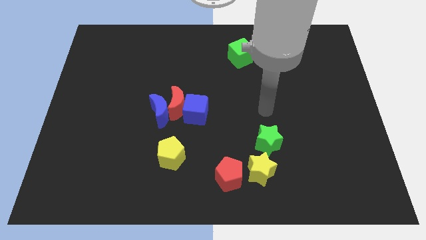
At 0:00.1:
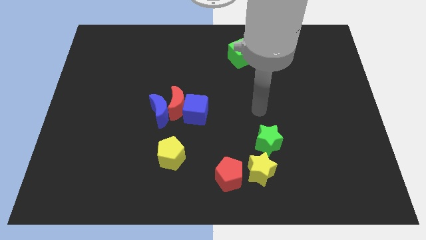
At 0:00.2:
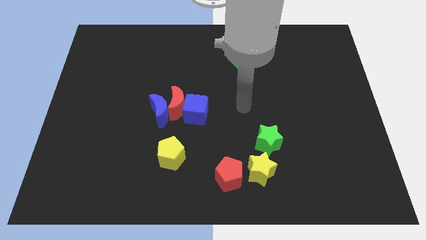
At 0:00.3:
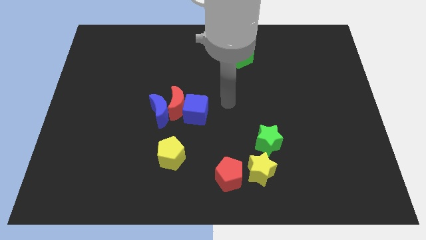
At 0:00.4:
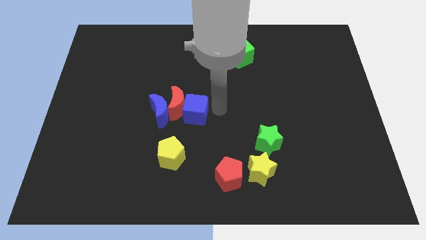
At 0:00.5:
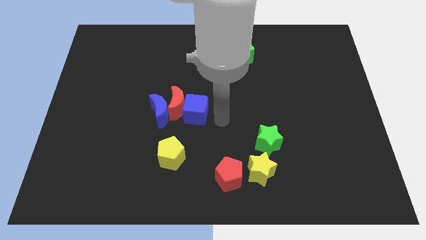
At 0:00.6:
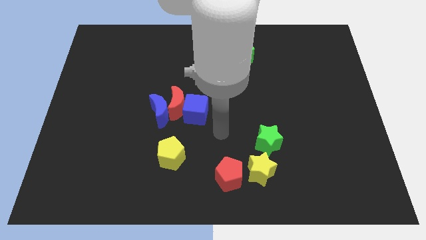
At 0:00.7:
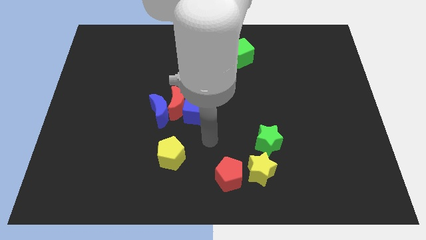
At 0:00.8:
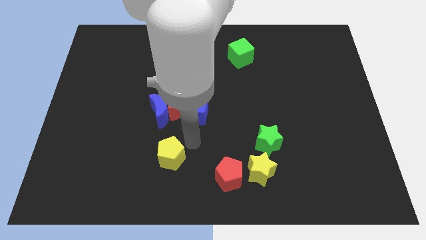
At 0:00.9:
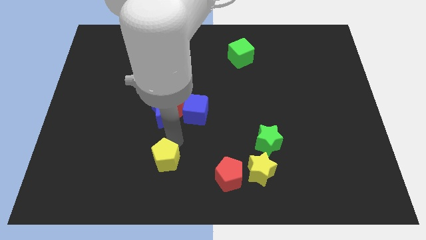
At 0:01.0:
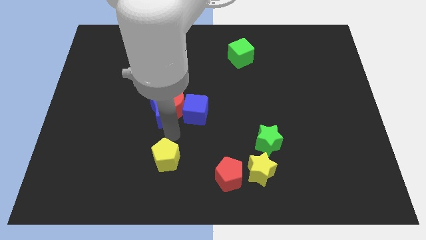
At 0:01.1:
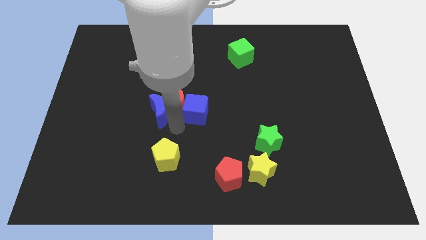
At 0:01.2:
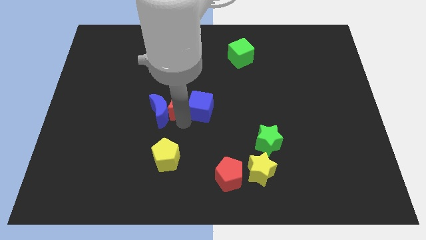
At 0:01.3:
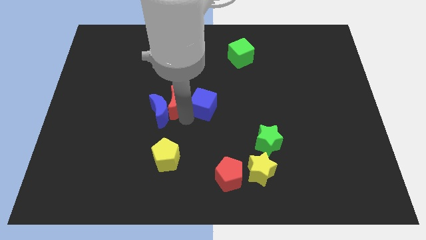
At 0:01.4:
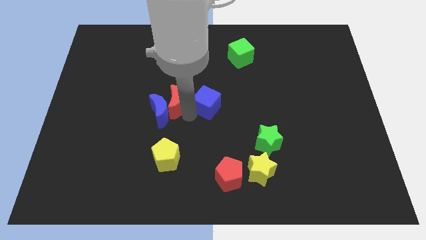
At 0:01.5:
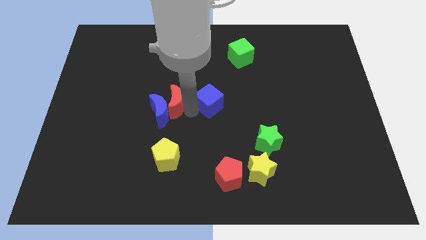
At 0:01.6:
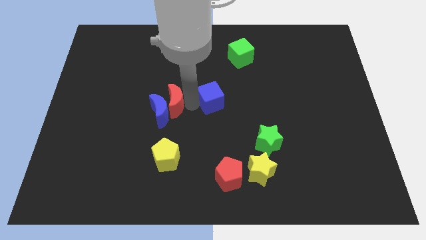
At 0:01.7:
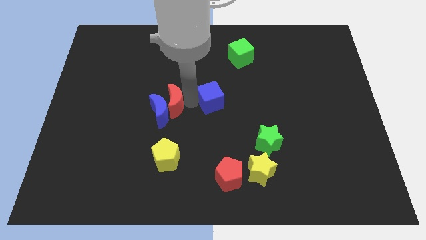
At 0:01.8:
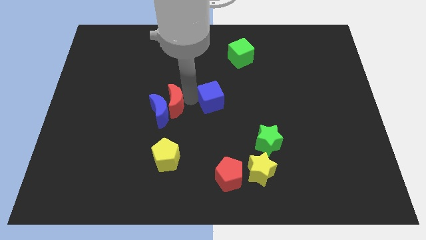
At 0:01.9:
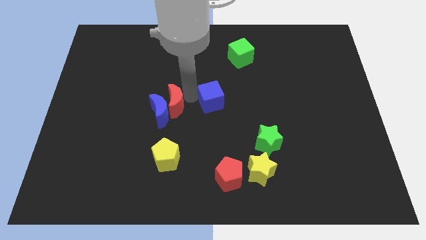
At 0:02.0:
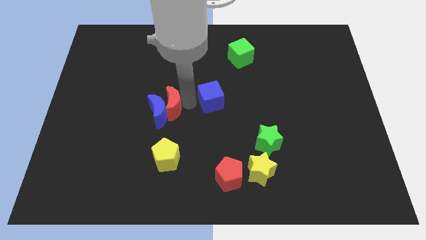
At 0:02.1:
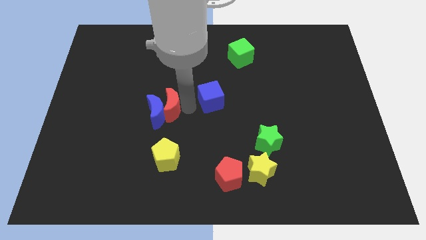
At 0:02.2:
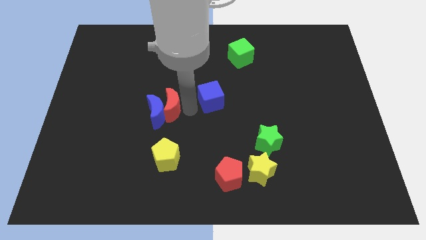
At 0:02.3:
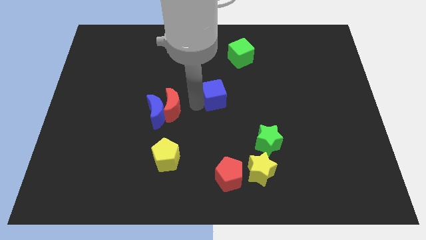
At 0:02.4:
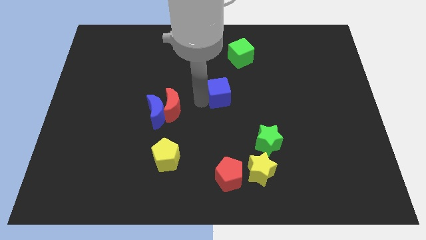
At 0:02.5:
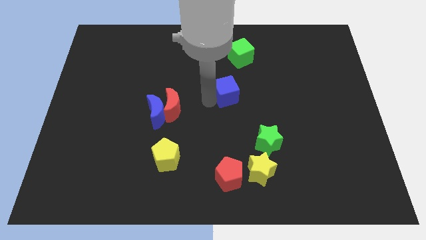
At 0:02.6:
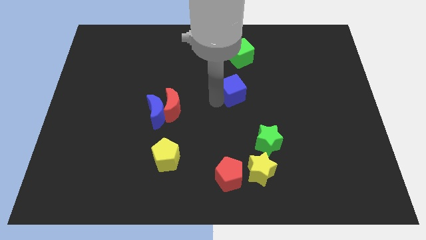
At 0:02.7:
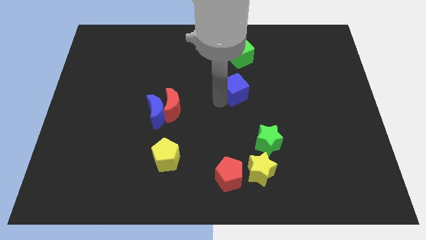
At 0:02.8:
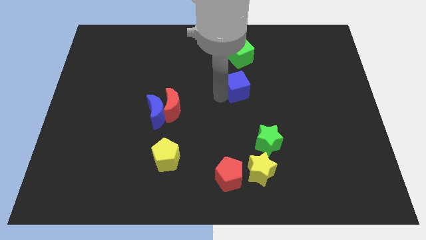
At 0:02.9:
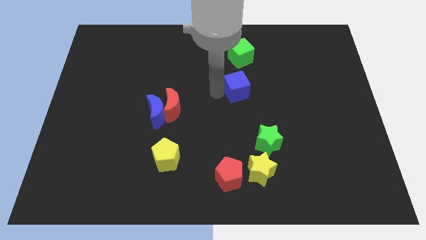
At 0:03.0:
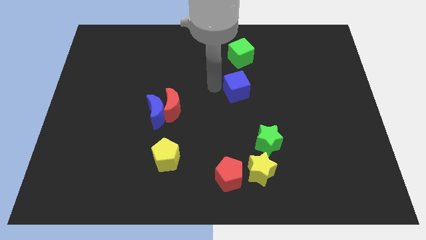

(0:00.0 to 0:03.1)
place the blue cube below the green cube

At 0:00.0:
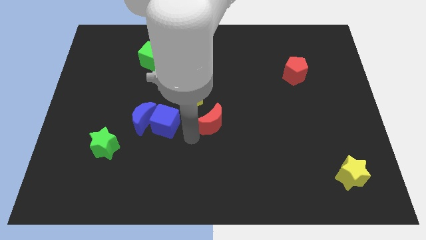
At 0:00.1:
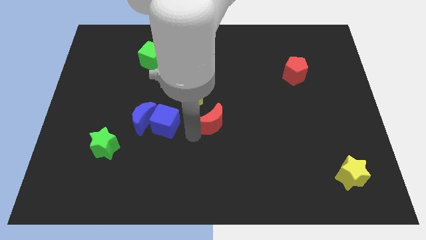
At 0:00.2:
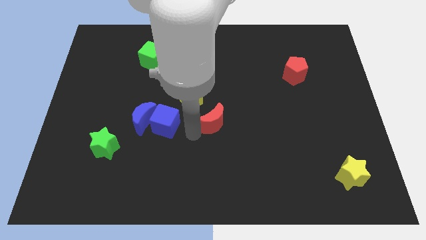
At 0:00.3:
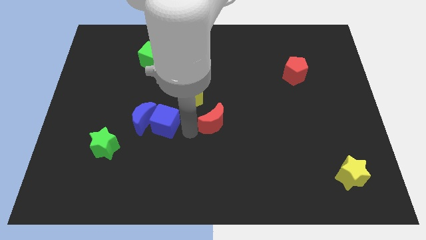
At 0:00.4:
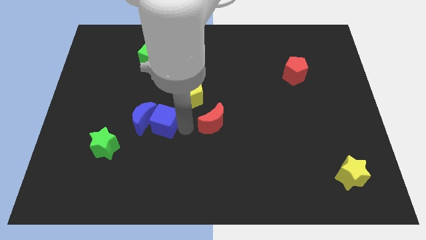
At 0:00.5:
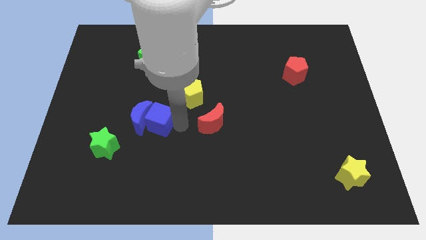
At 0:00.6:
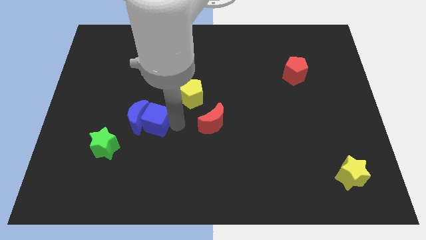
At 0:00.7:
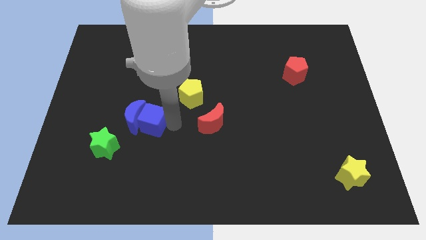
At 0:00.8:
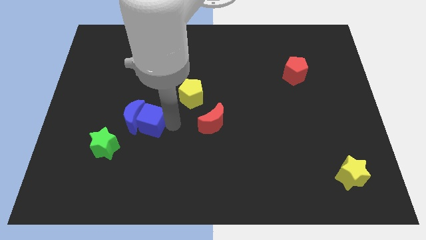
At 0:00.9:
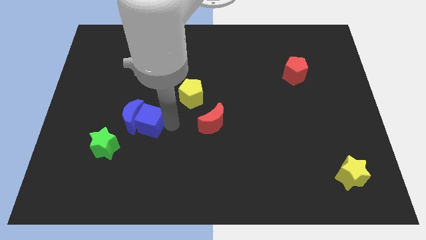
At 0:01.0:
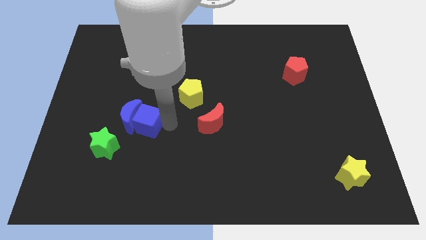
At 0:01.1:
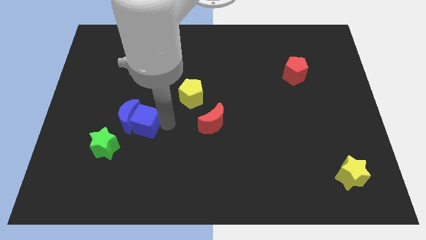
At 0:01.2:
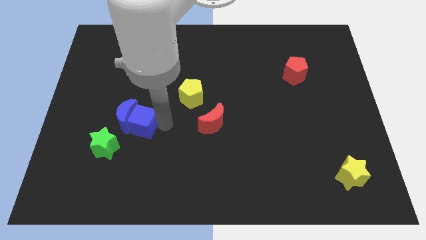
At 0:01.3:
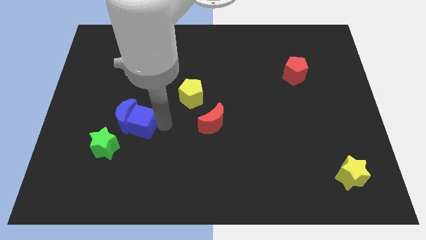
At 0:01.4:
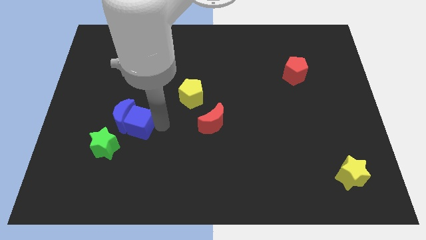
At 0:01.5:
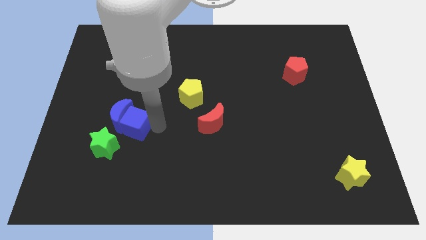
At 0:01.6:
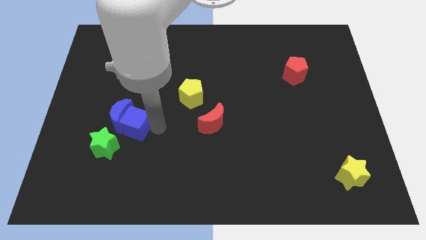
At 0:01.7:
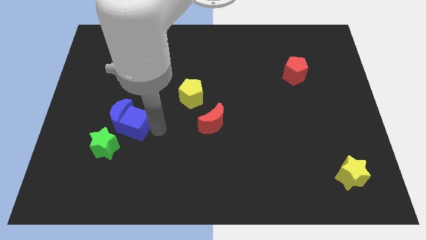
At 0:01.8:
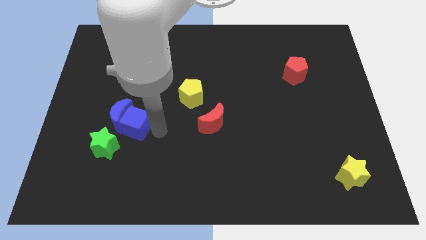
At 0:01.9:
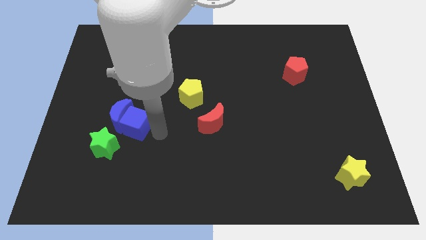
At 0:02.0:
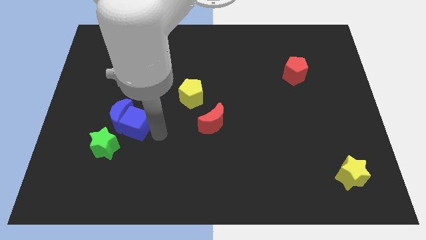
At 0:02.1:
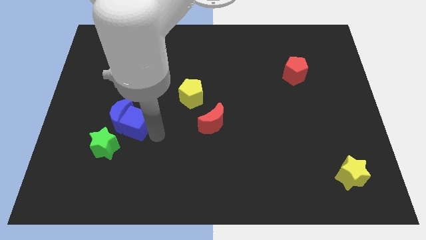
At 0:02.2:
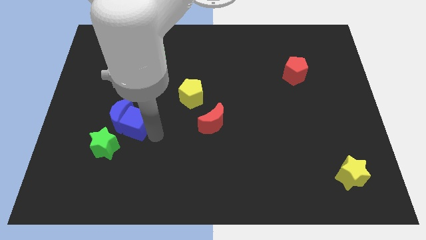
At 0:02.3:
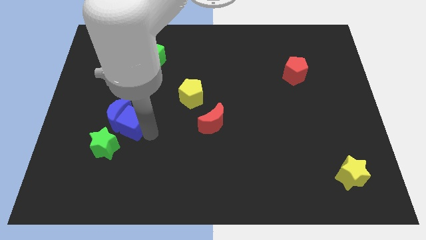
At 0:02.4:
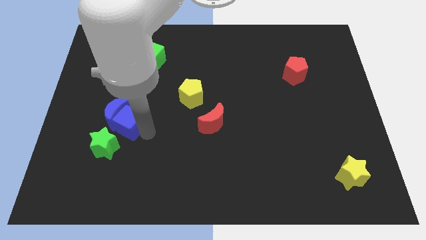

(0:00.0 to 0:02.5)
push the blue cube into the blue moon

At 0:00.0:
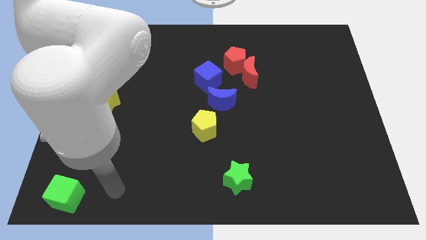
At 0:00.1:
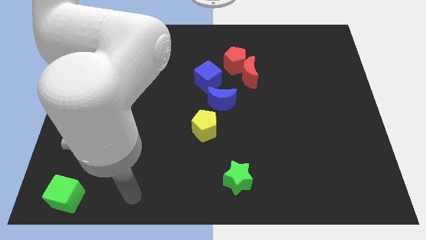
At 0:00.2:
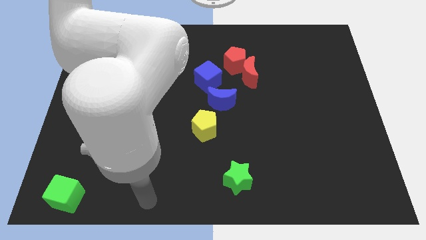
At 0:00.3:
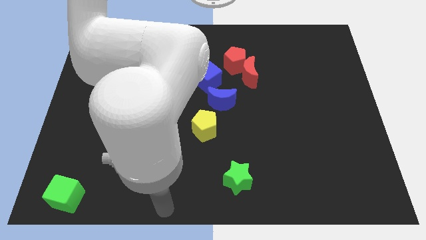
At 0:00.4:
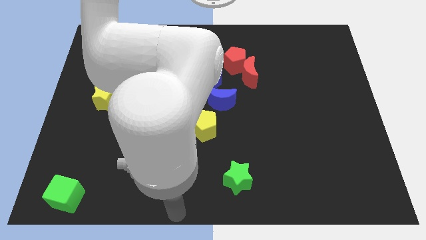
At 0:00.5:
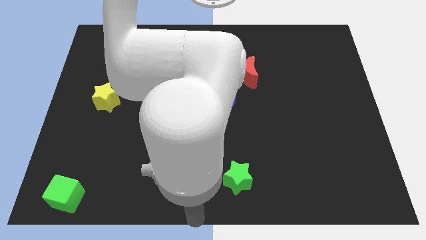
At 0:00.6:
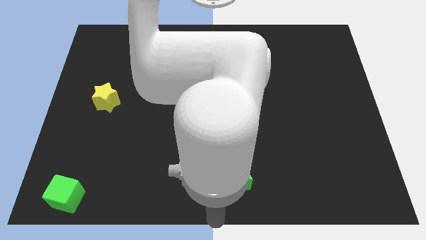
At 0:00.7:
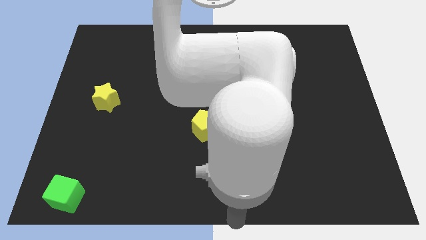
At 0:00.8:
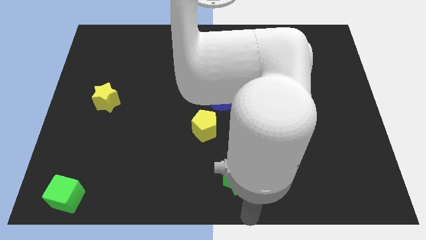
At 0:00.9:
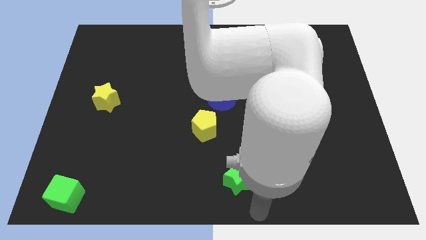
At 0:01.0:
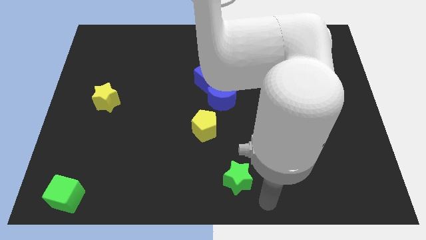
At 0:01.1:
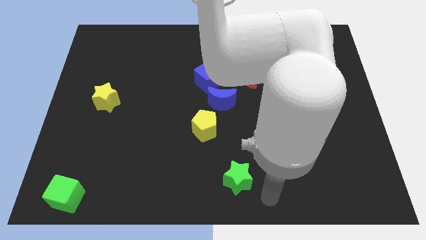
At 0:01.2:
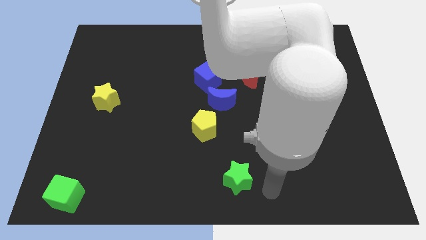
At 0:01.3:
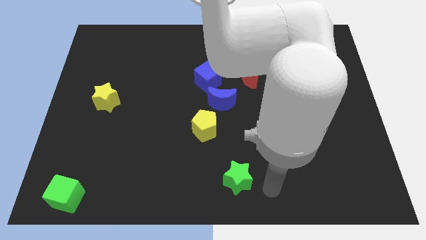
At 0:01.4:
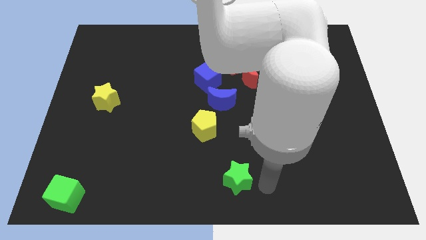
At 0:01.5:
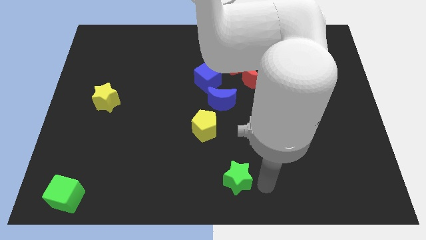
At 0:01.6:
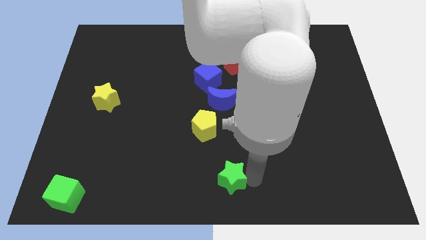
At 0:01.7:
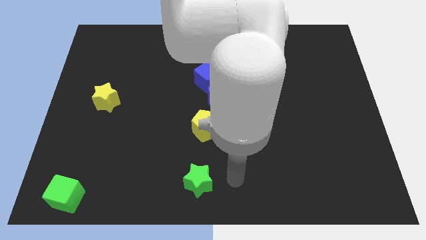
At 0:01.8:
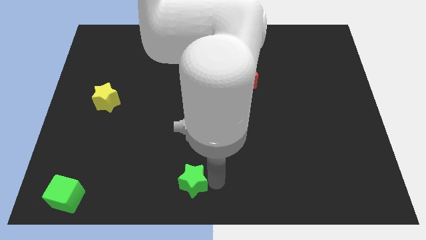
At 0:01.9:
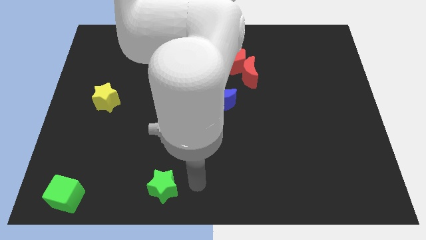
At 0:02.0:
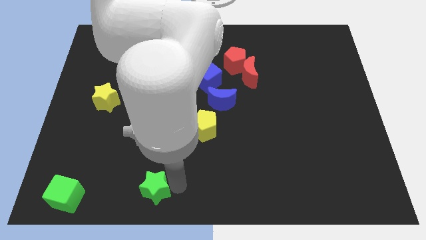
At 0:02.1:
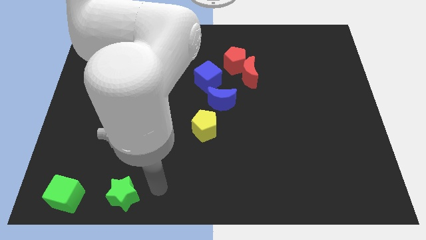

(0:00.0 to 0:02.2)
place the green star below the yellow star

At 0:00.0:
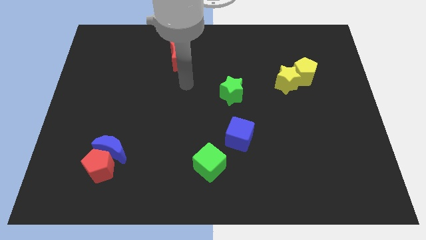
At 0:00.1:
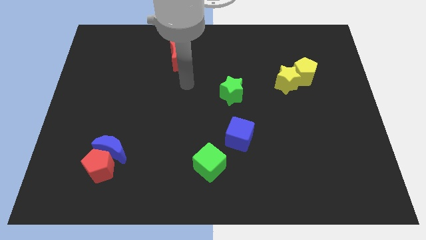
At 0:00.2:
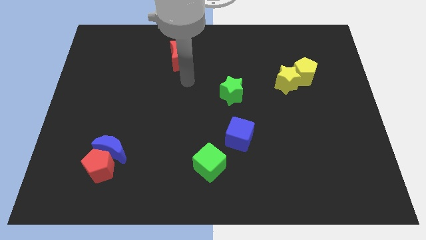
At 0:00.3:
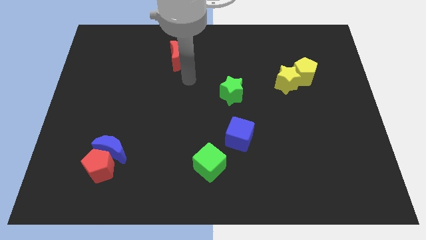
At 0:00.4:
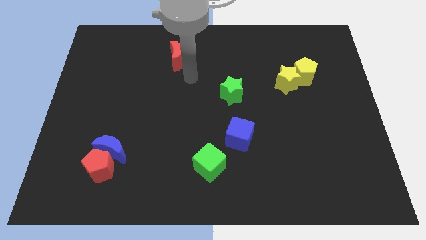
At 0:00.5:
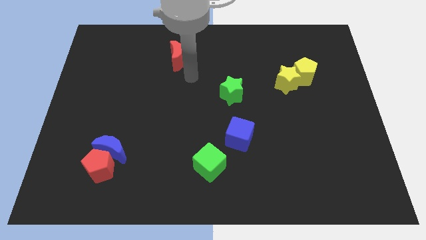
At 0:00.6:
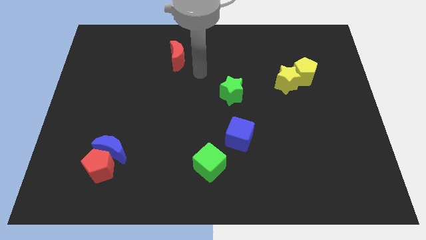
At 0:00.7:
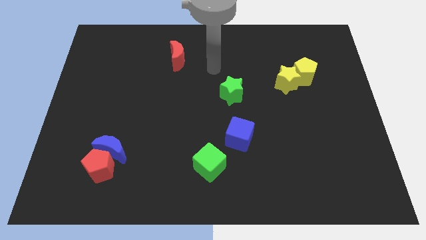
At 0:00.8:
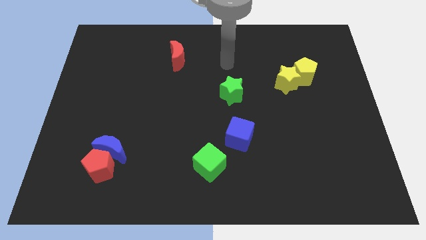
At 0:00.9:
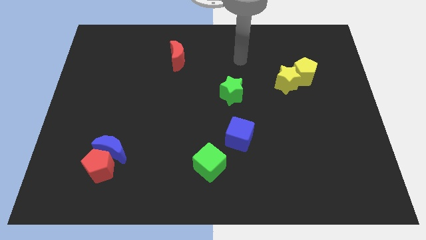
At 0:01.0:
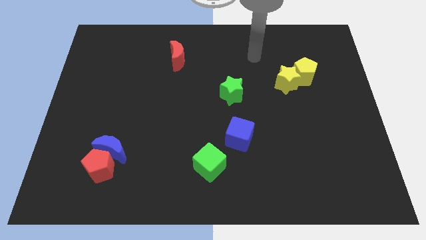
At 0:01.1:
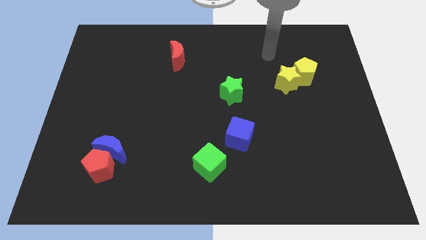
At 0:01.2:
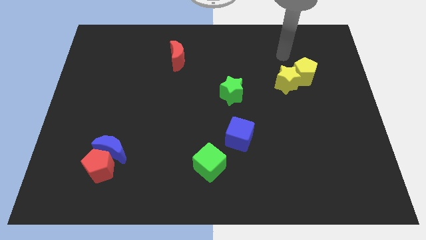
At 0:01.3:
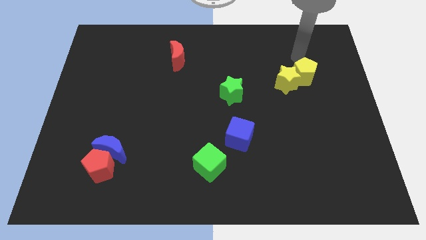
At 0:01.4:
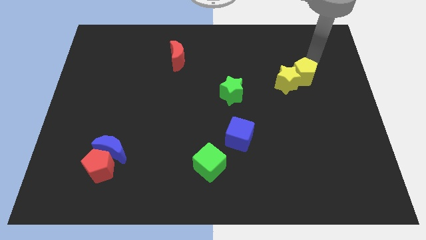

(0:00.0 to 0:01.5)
put your hand vertically above the yellow pentagon
